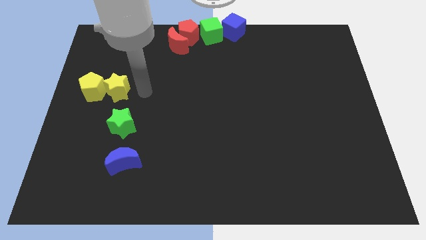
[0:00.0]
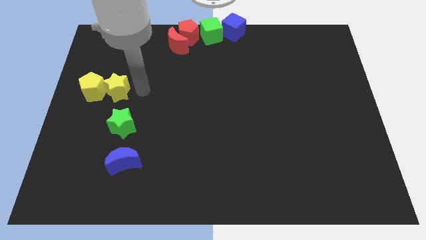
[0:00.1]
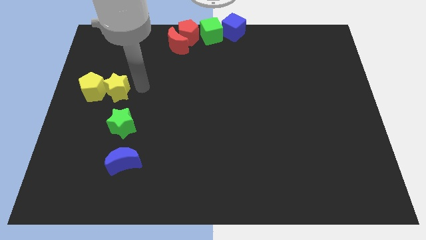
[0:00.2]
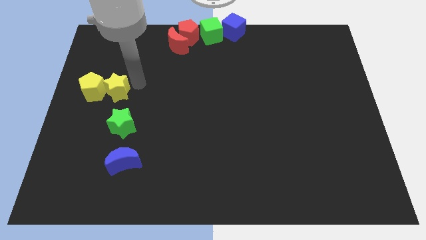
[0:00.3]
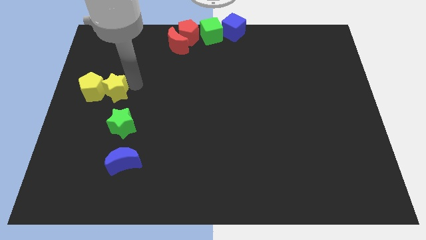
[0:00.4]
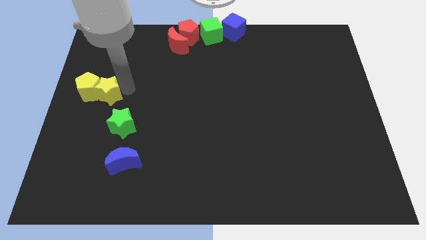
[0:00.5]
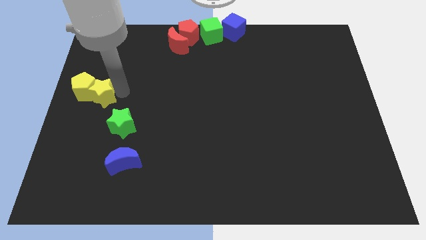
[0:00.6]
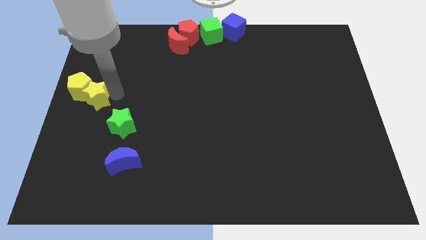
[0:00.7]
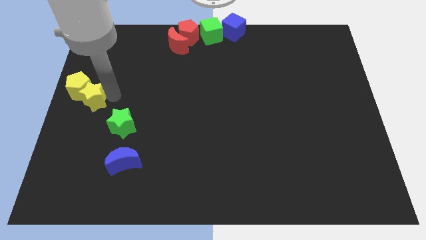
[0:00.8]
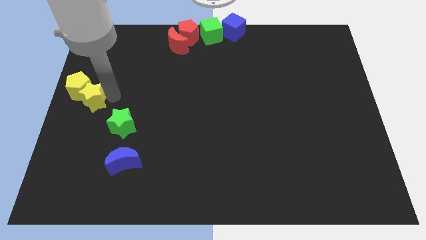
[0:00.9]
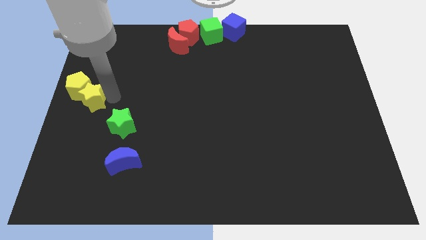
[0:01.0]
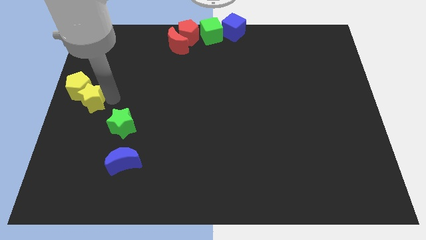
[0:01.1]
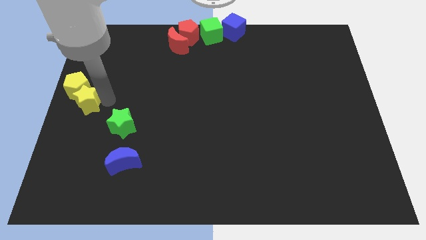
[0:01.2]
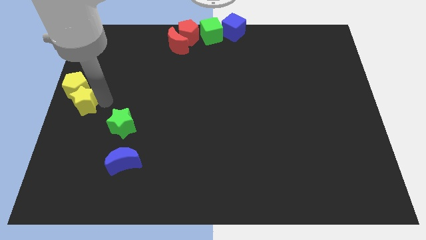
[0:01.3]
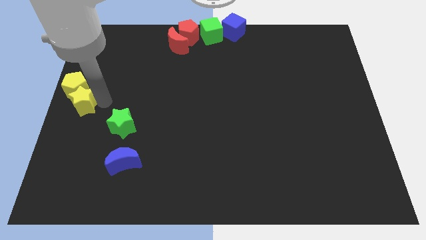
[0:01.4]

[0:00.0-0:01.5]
push yellow pentagon with the yellow star

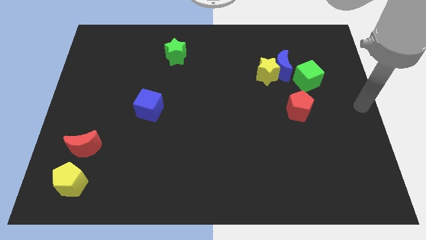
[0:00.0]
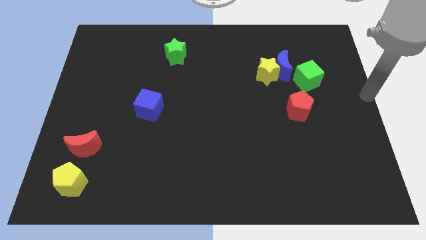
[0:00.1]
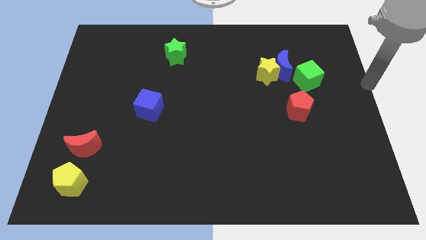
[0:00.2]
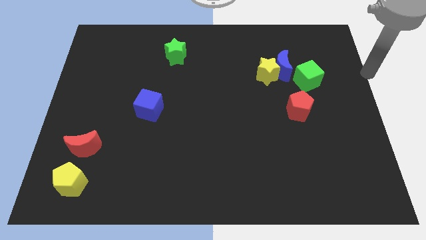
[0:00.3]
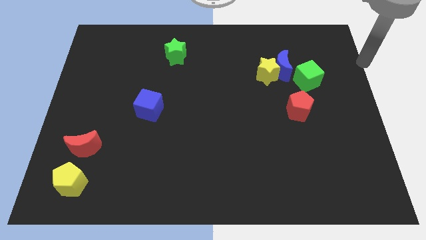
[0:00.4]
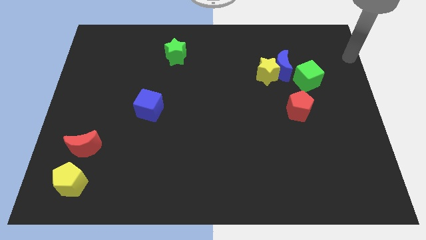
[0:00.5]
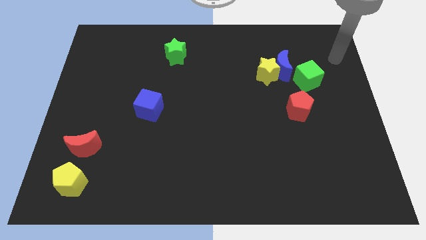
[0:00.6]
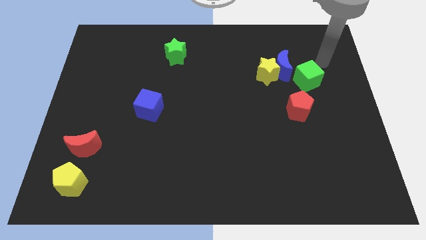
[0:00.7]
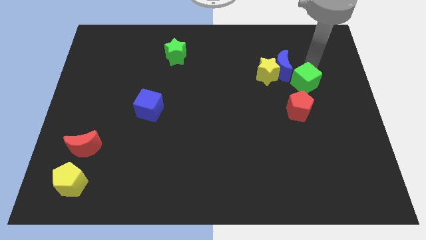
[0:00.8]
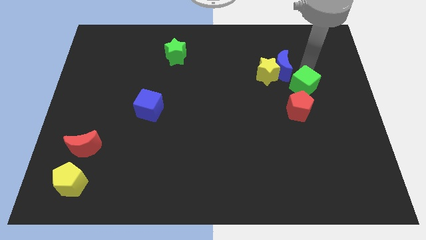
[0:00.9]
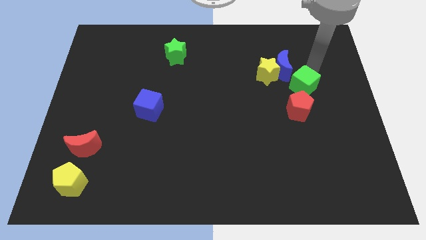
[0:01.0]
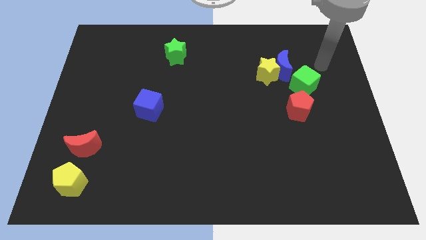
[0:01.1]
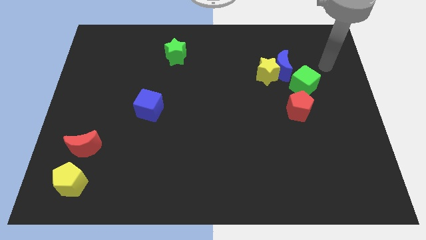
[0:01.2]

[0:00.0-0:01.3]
push the green cube towards the red pentagon

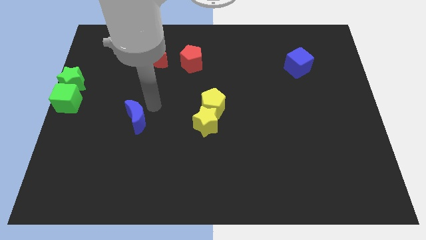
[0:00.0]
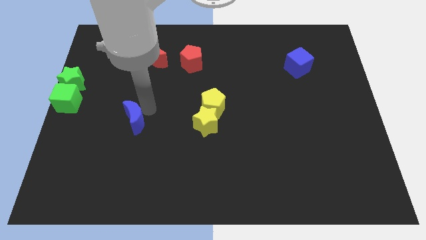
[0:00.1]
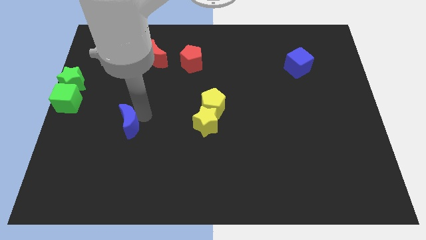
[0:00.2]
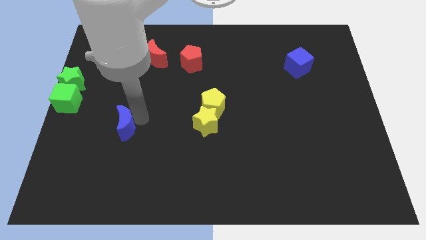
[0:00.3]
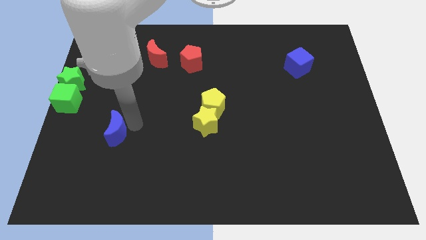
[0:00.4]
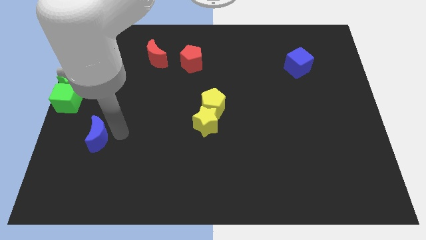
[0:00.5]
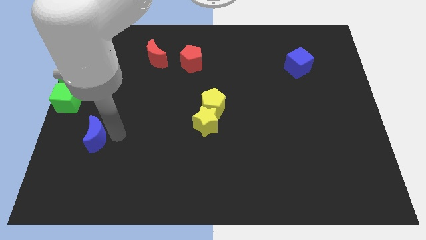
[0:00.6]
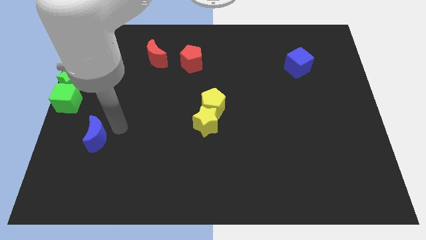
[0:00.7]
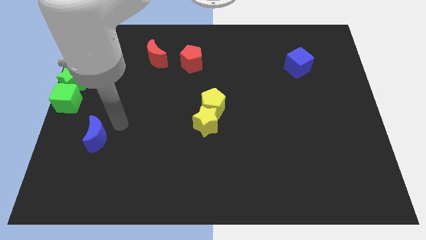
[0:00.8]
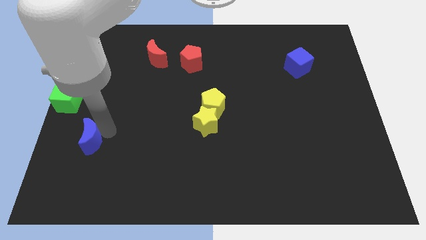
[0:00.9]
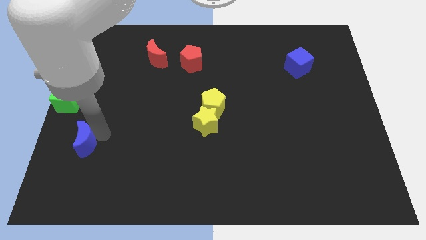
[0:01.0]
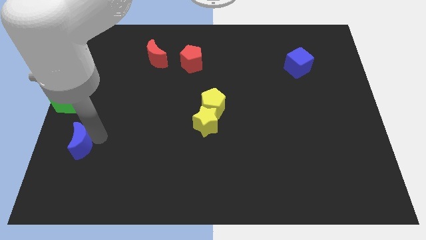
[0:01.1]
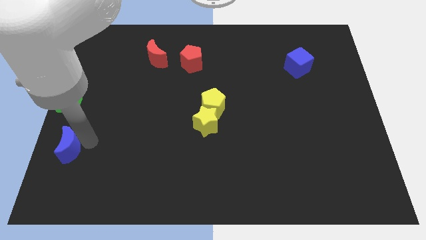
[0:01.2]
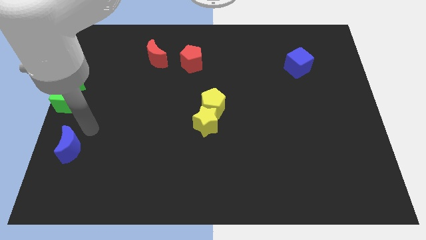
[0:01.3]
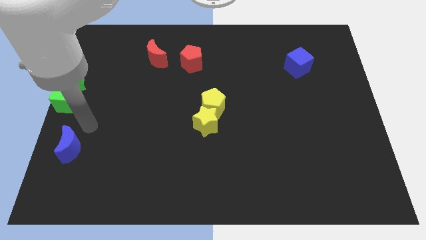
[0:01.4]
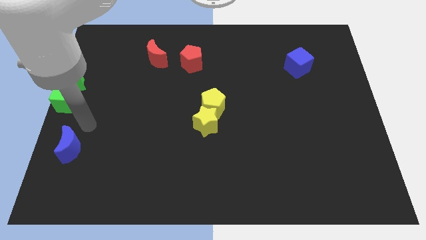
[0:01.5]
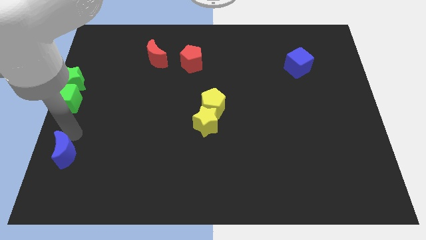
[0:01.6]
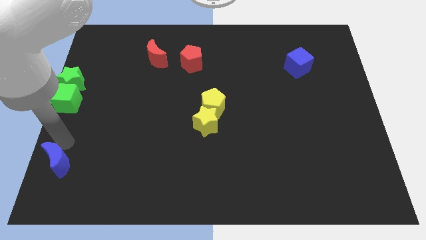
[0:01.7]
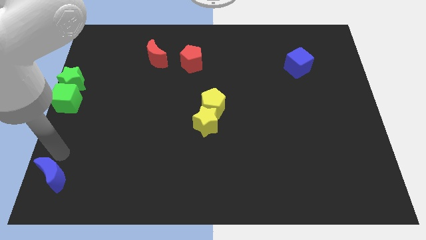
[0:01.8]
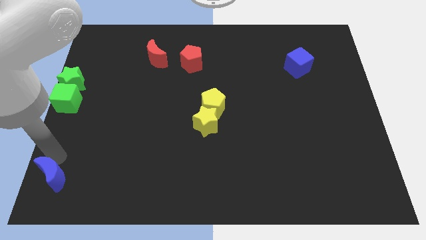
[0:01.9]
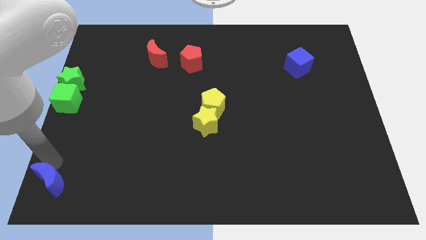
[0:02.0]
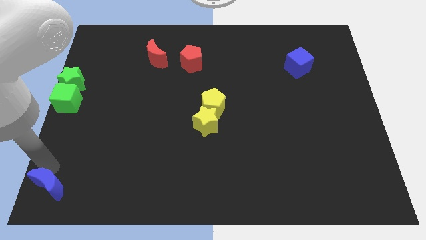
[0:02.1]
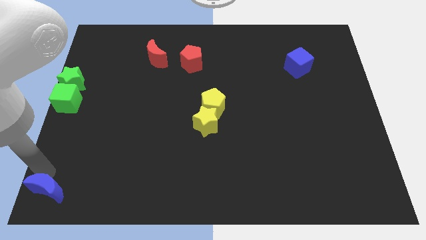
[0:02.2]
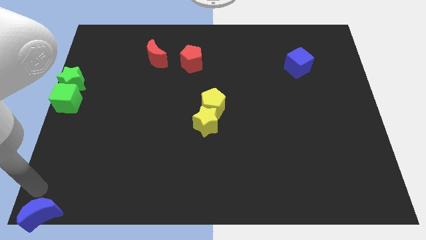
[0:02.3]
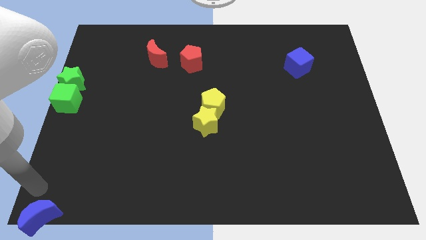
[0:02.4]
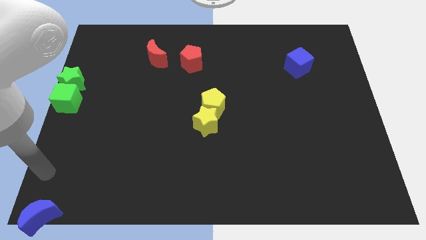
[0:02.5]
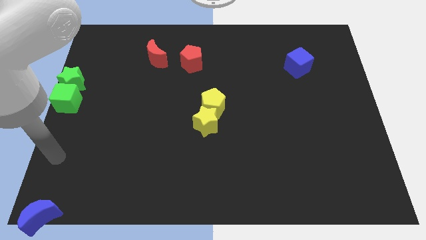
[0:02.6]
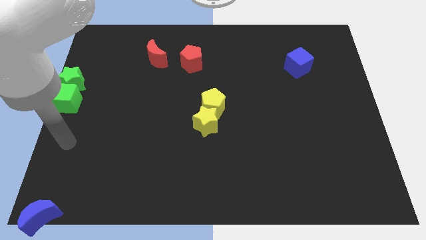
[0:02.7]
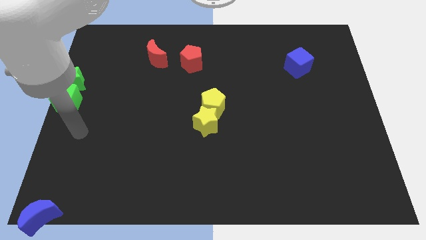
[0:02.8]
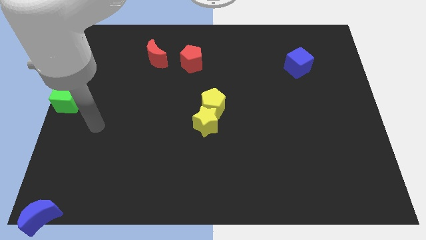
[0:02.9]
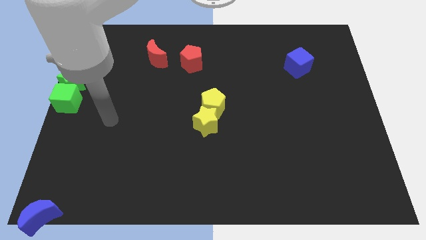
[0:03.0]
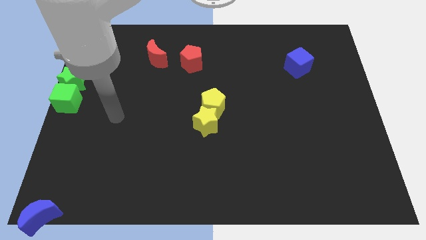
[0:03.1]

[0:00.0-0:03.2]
push blue moon to the bottom left corner

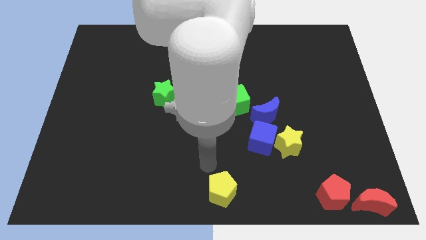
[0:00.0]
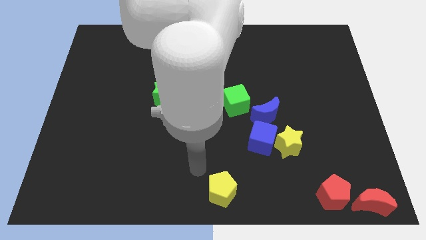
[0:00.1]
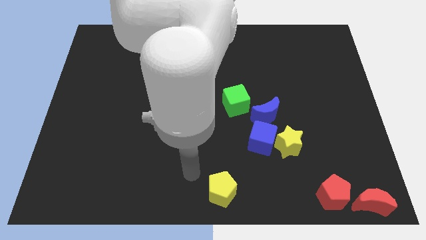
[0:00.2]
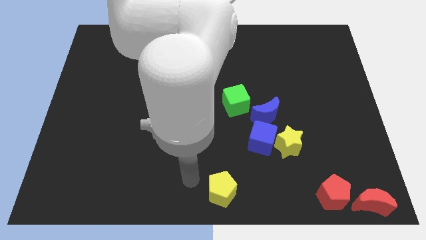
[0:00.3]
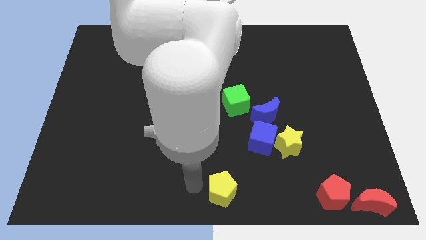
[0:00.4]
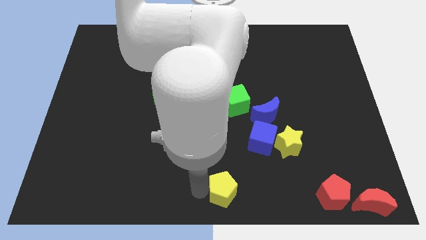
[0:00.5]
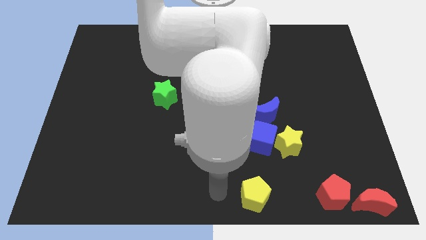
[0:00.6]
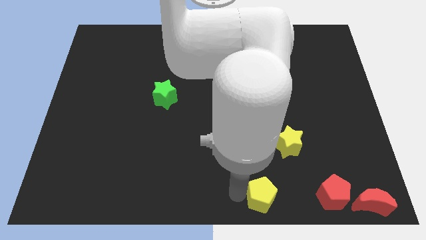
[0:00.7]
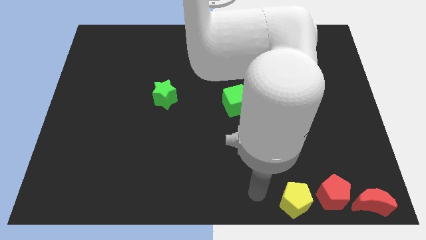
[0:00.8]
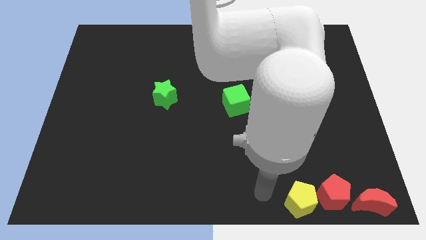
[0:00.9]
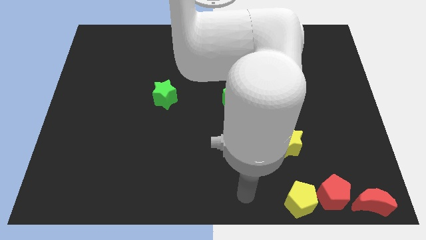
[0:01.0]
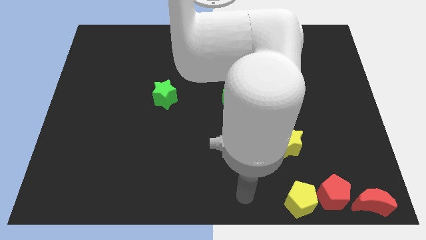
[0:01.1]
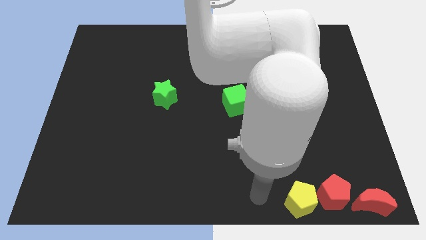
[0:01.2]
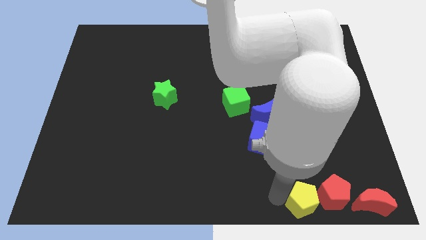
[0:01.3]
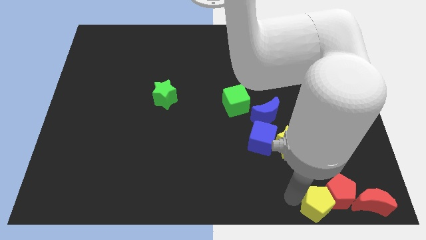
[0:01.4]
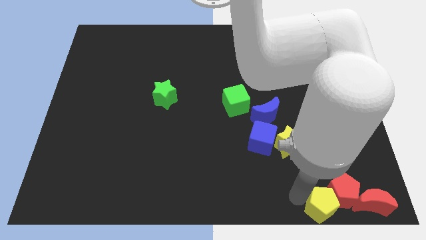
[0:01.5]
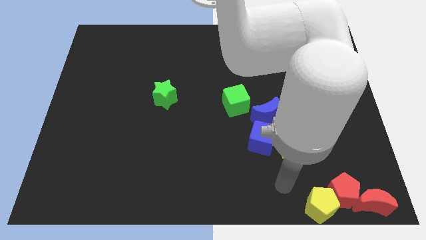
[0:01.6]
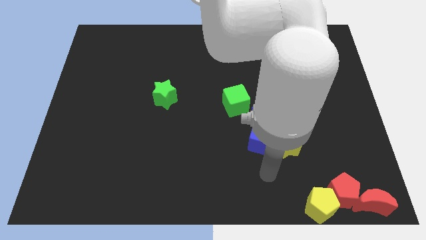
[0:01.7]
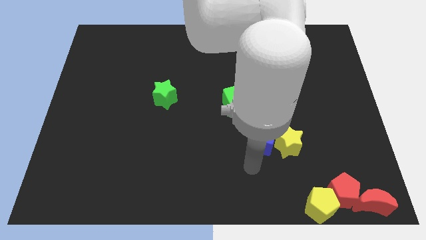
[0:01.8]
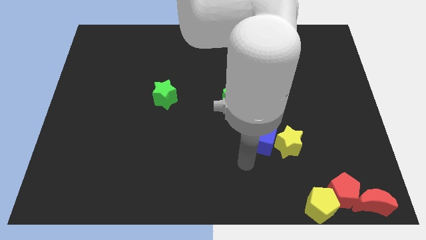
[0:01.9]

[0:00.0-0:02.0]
push the yellow pentagon into the red pentagon

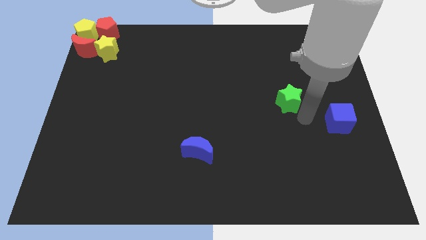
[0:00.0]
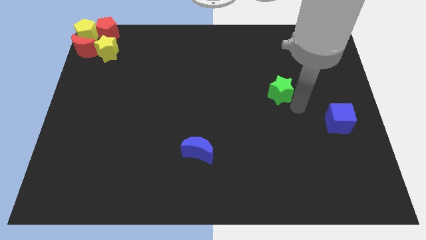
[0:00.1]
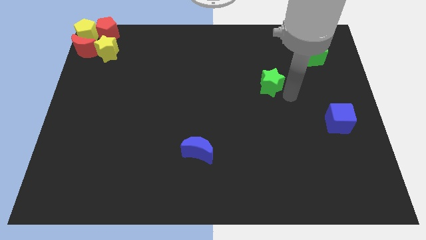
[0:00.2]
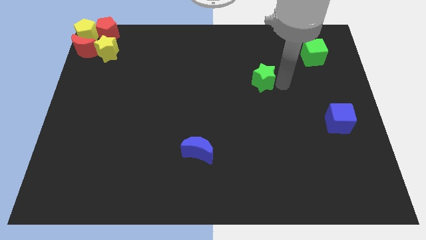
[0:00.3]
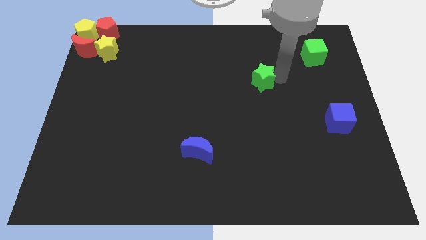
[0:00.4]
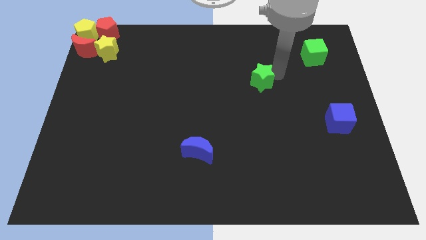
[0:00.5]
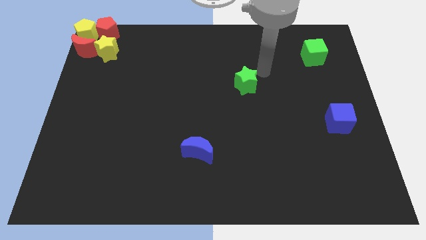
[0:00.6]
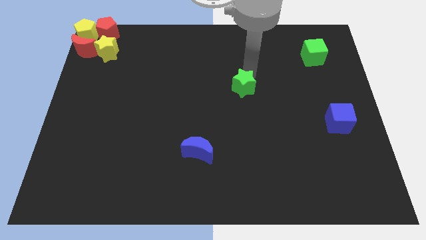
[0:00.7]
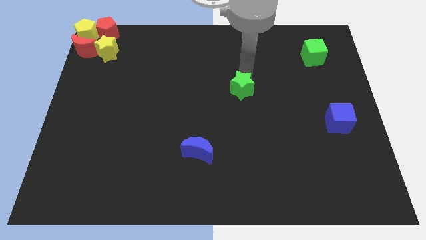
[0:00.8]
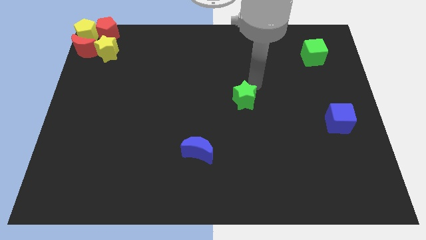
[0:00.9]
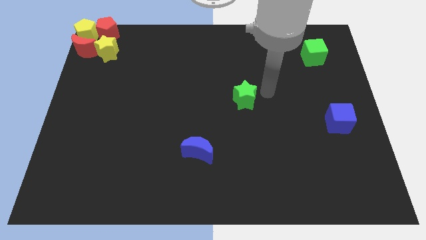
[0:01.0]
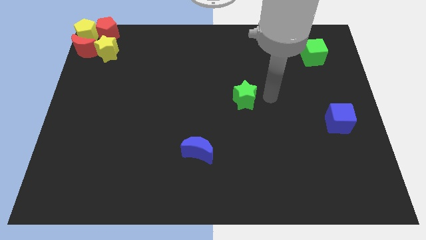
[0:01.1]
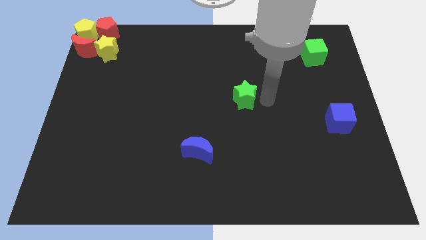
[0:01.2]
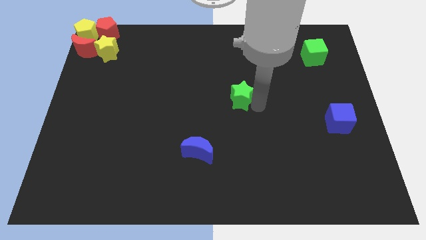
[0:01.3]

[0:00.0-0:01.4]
move the green star to the center
